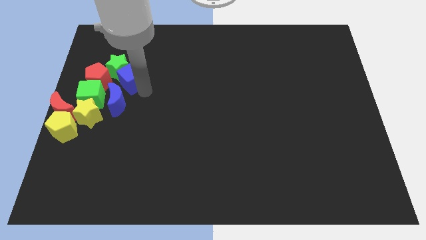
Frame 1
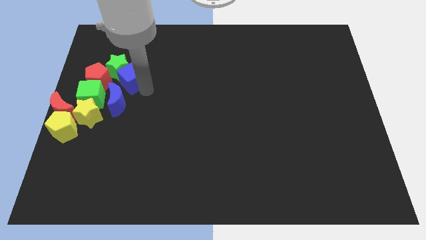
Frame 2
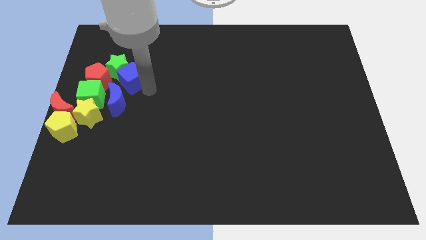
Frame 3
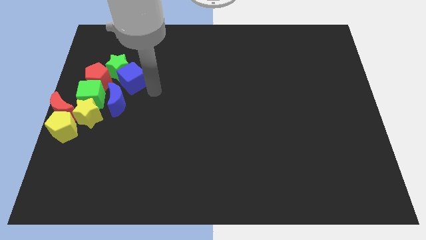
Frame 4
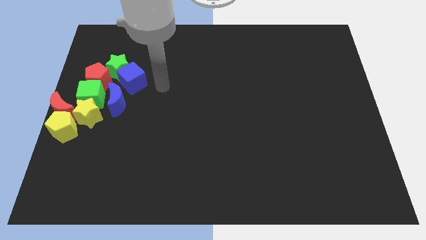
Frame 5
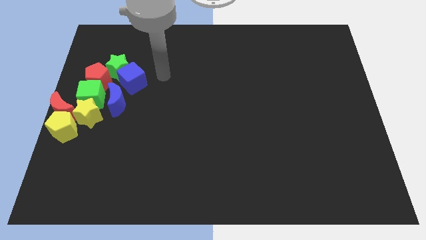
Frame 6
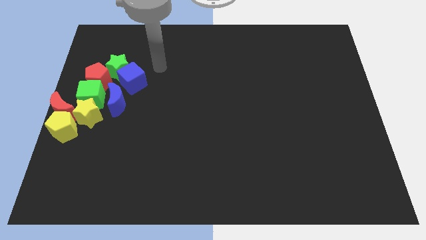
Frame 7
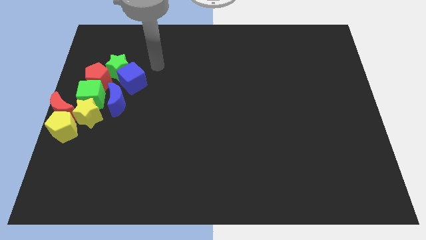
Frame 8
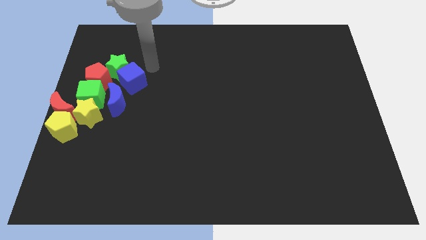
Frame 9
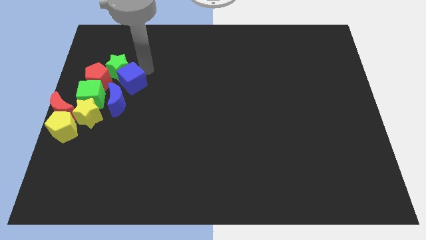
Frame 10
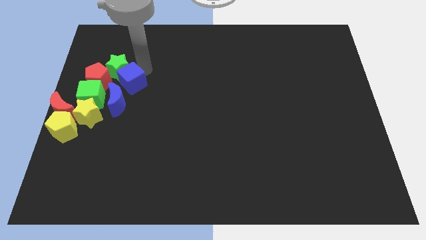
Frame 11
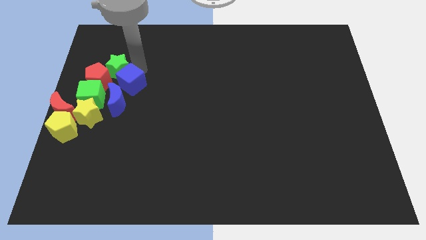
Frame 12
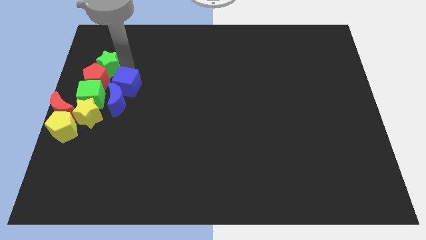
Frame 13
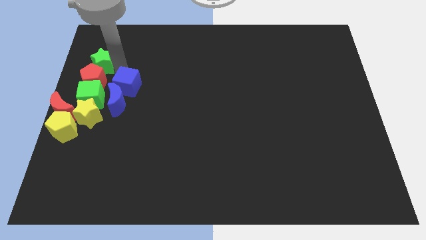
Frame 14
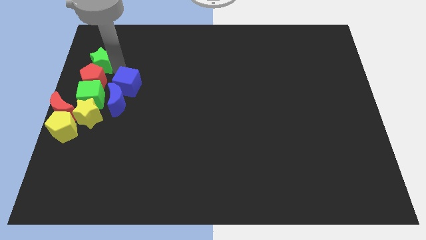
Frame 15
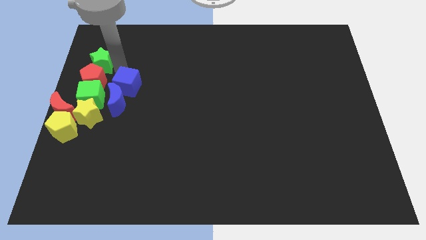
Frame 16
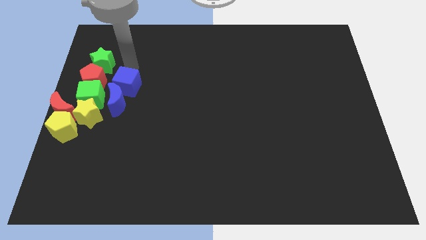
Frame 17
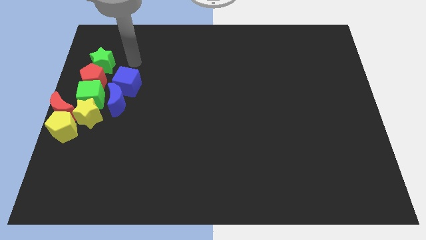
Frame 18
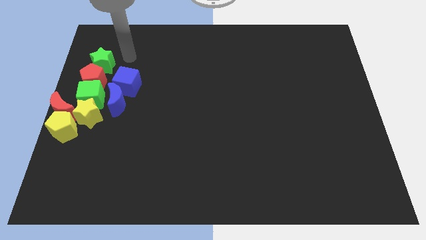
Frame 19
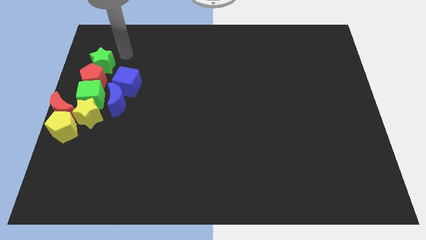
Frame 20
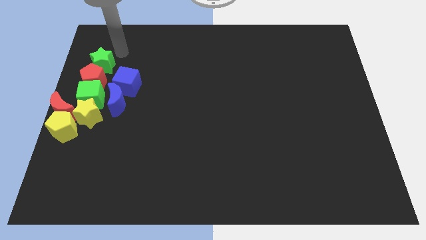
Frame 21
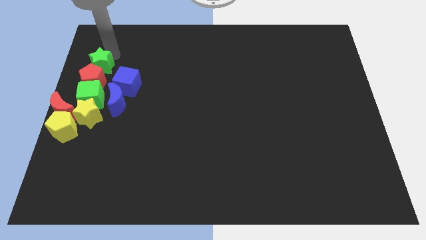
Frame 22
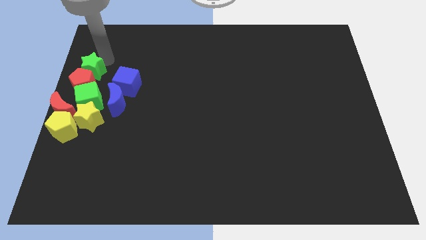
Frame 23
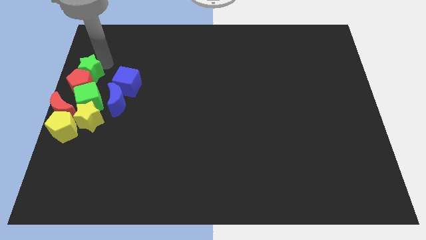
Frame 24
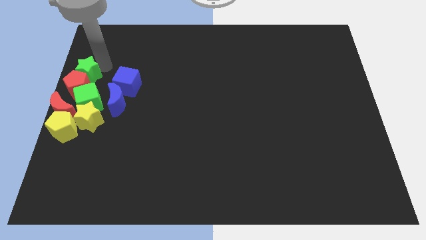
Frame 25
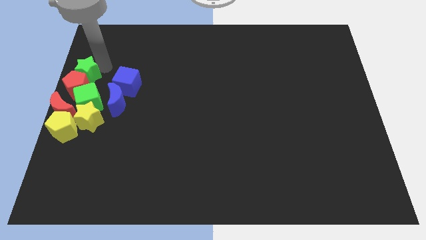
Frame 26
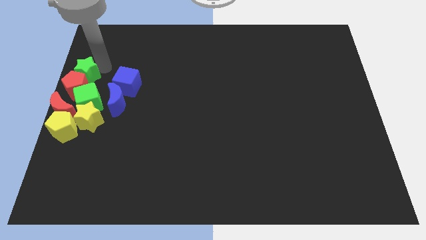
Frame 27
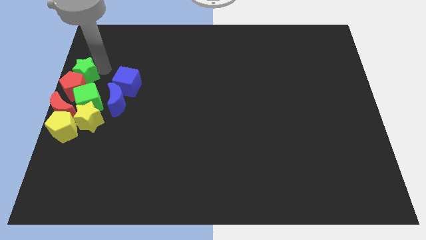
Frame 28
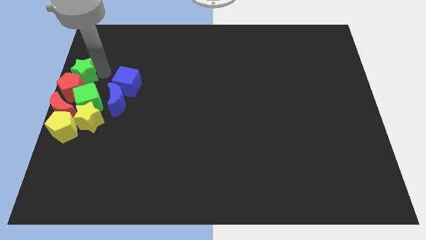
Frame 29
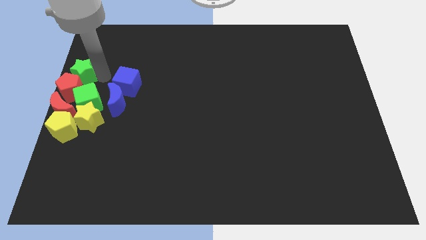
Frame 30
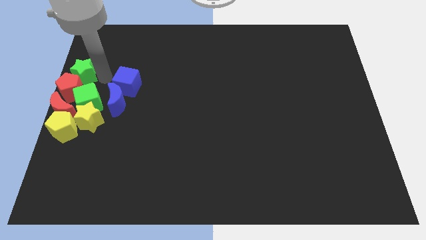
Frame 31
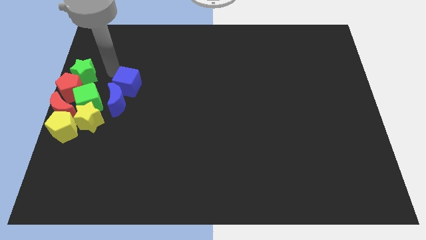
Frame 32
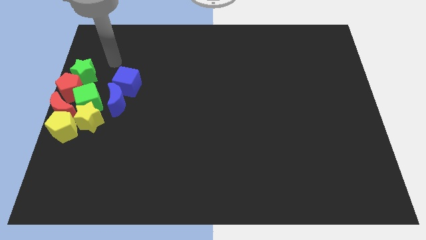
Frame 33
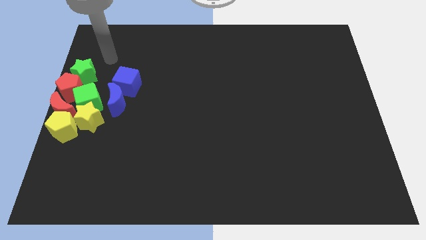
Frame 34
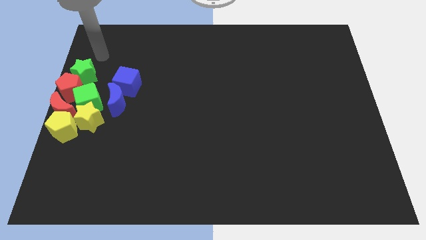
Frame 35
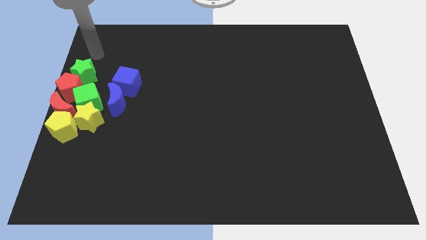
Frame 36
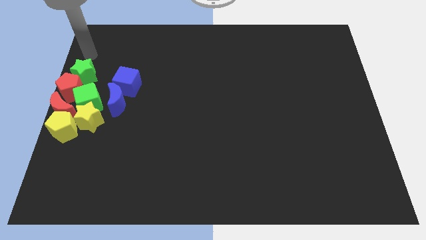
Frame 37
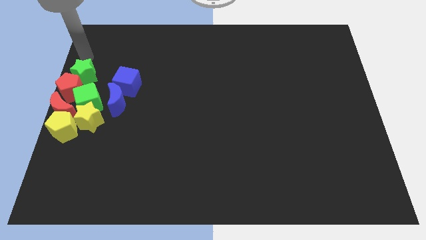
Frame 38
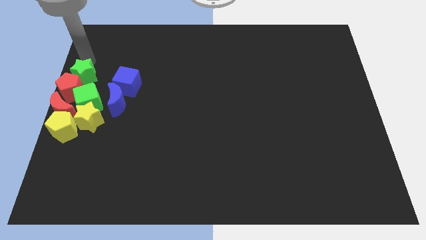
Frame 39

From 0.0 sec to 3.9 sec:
separate green star from the blue cube

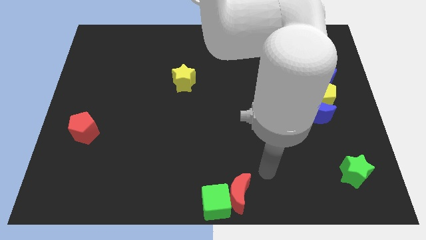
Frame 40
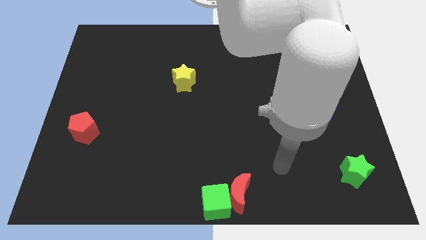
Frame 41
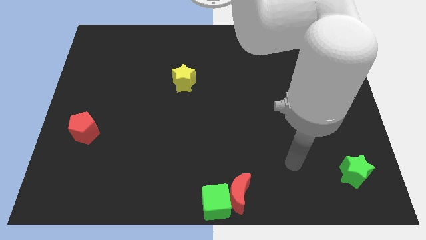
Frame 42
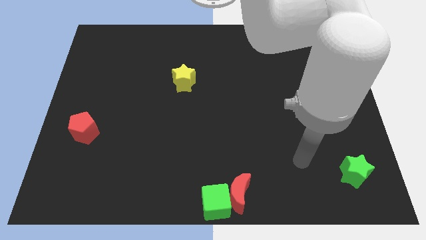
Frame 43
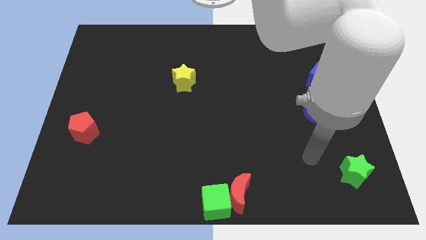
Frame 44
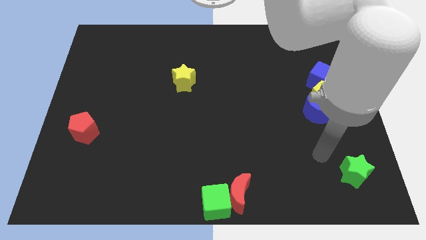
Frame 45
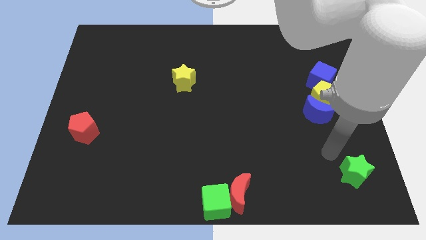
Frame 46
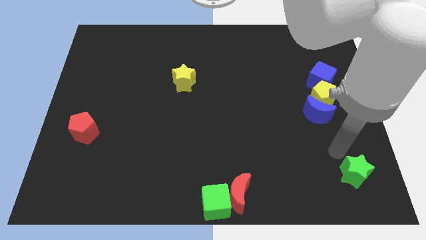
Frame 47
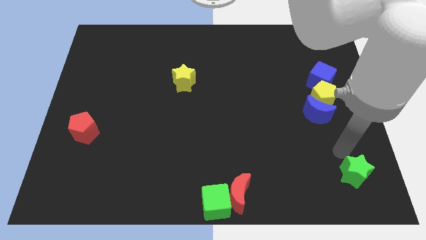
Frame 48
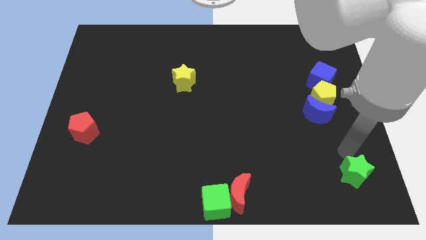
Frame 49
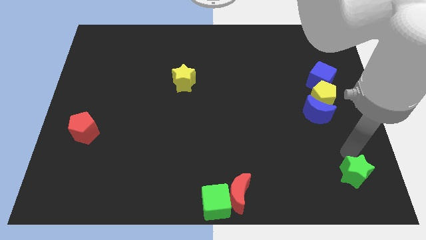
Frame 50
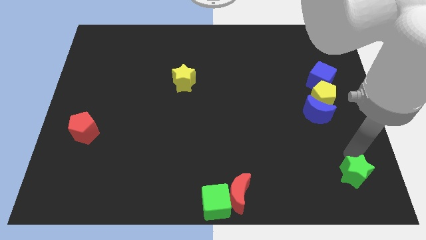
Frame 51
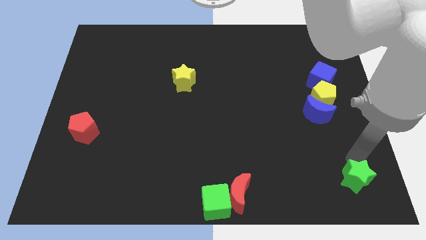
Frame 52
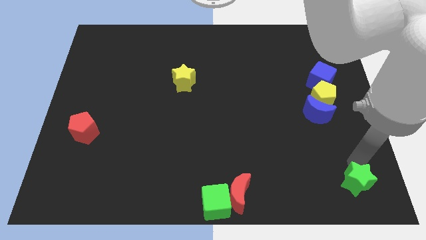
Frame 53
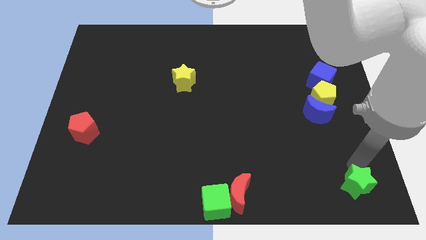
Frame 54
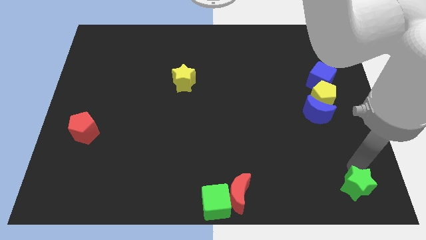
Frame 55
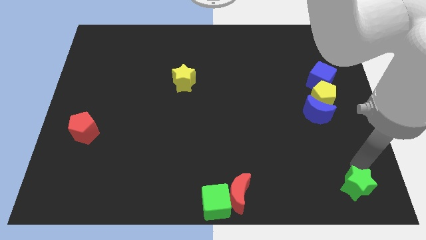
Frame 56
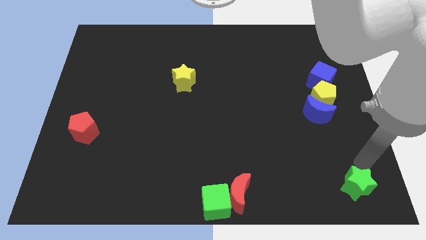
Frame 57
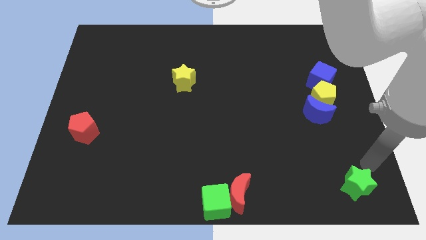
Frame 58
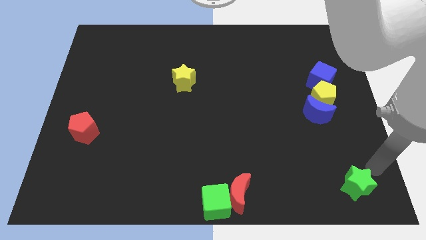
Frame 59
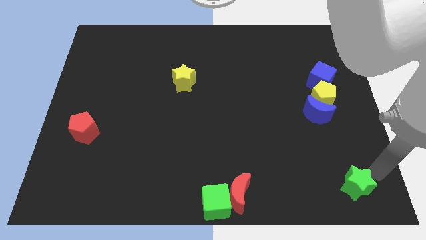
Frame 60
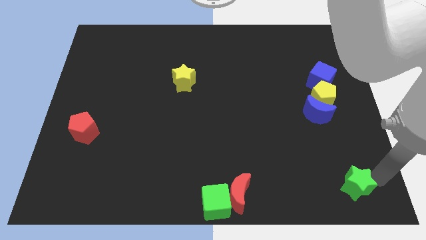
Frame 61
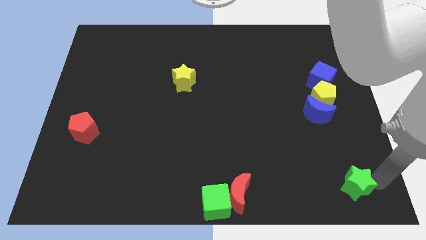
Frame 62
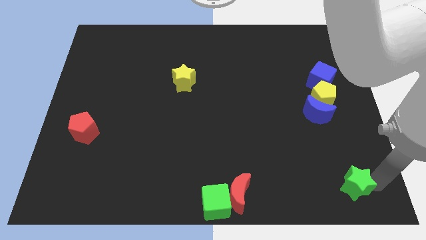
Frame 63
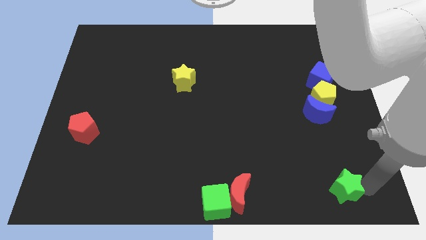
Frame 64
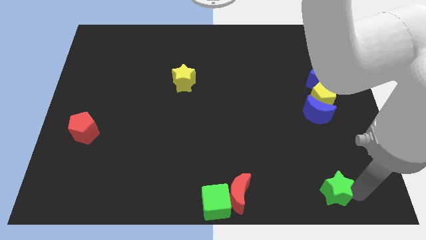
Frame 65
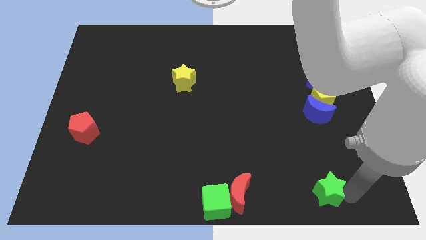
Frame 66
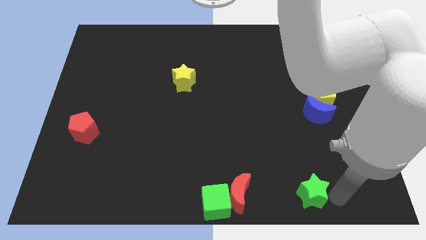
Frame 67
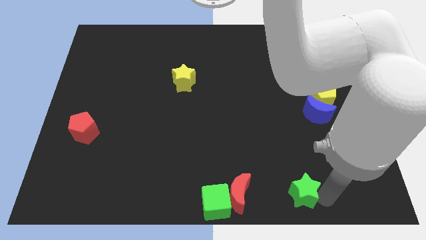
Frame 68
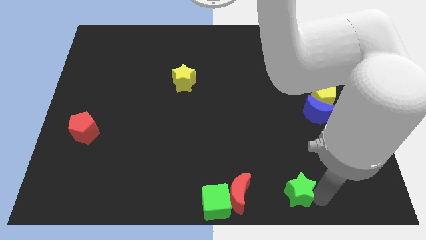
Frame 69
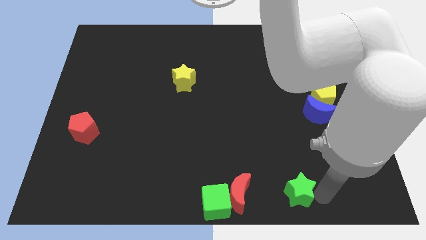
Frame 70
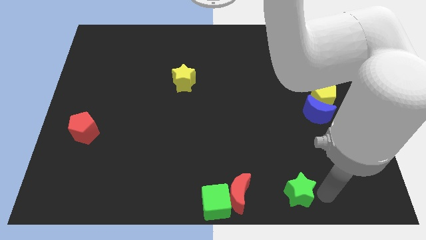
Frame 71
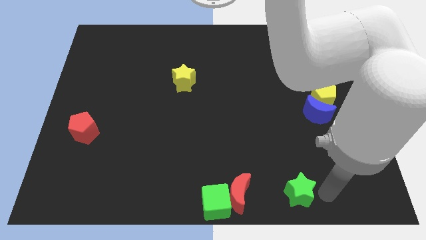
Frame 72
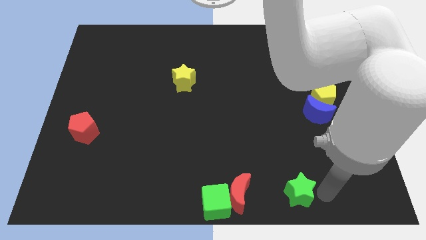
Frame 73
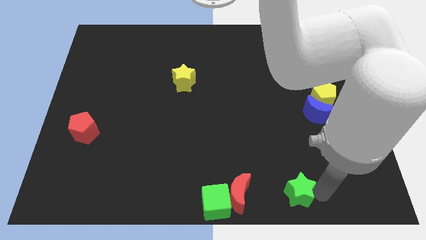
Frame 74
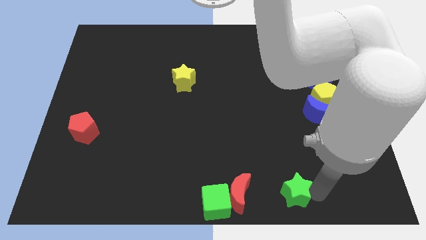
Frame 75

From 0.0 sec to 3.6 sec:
drag the green star diagonally bottom left to the blue moon

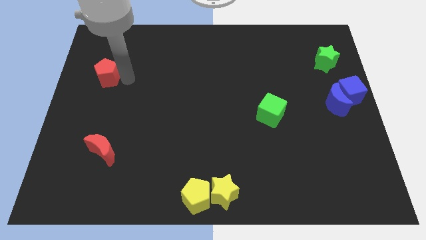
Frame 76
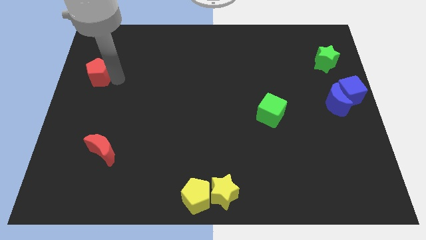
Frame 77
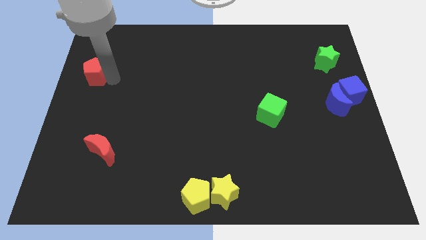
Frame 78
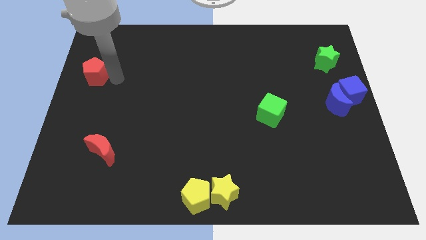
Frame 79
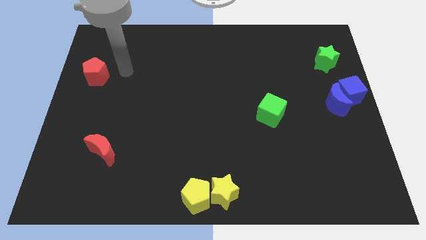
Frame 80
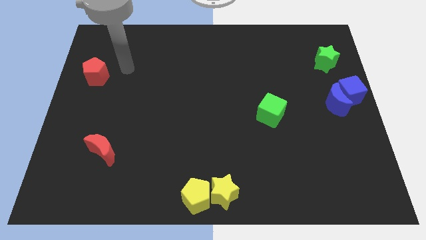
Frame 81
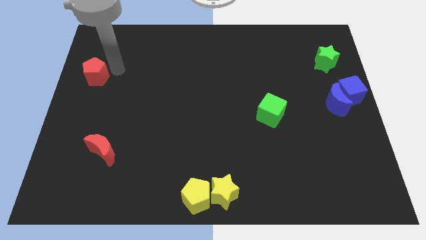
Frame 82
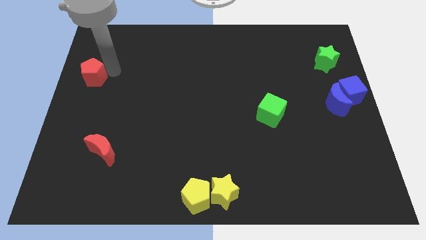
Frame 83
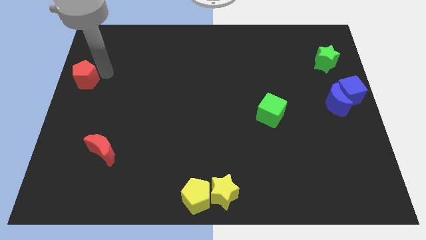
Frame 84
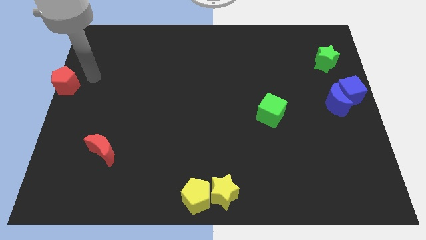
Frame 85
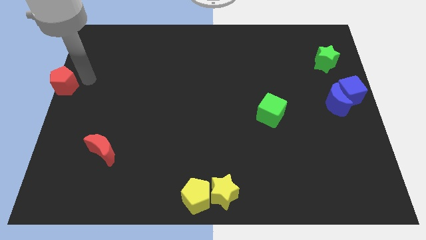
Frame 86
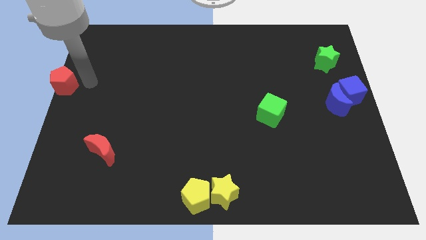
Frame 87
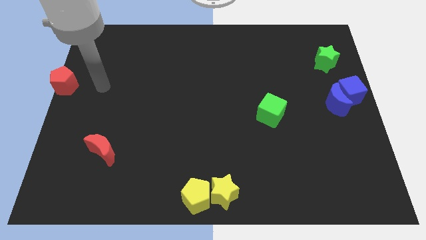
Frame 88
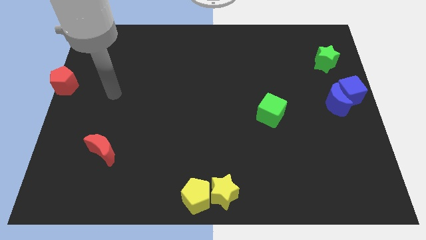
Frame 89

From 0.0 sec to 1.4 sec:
move the red pentagon to the center left
